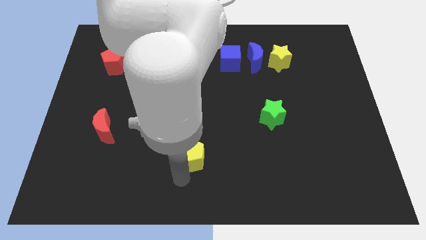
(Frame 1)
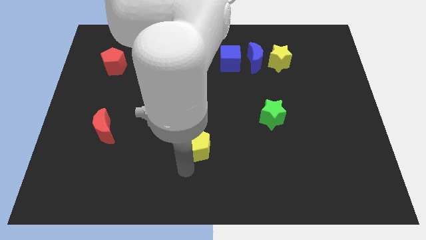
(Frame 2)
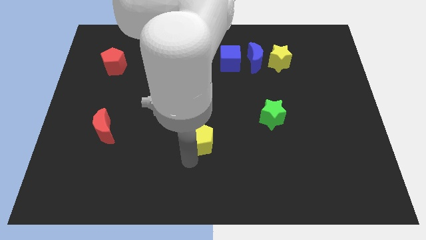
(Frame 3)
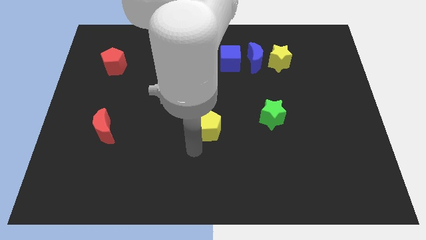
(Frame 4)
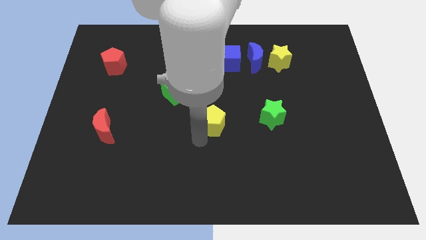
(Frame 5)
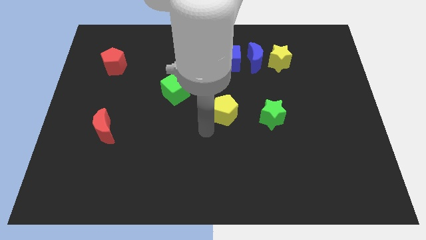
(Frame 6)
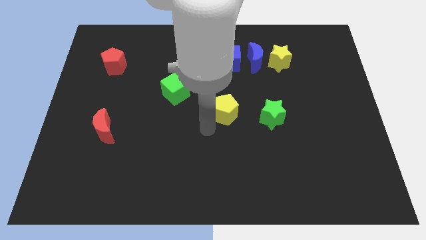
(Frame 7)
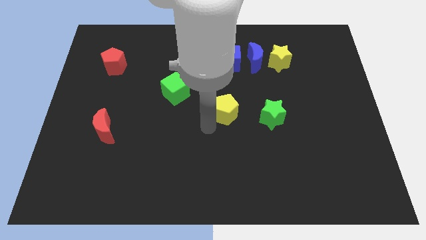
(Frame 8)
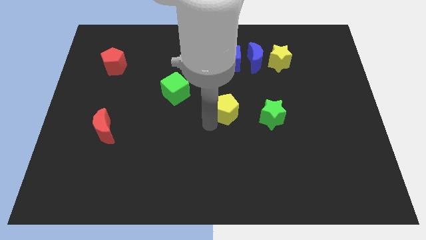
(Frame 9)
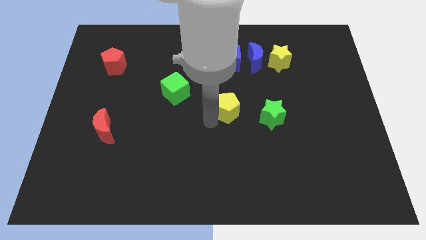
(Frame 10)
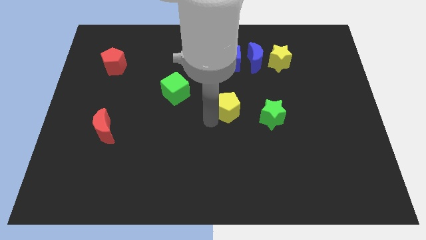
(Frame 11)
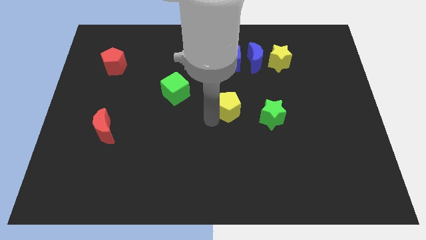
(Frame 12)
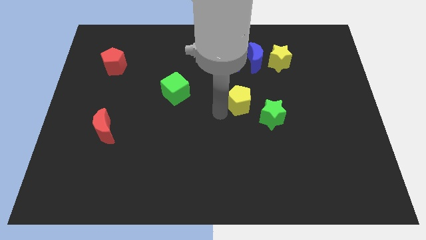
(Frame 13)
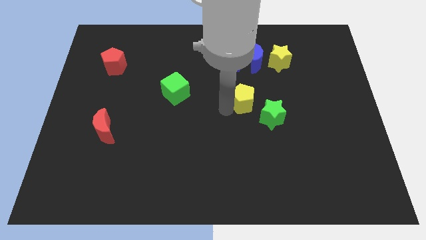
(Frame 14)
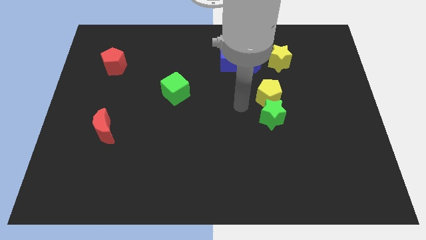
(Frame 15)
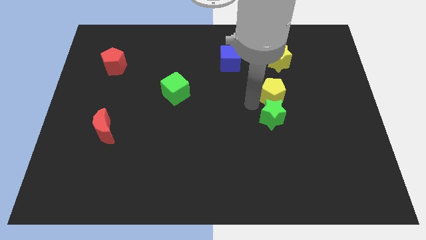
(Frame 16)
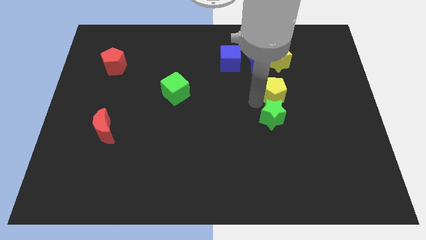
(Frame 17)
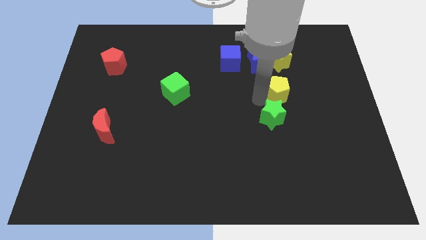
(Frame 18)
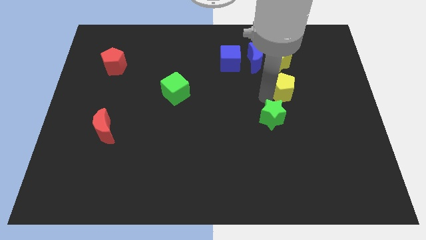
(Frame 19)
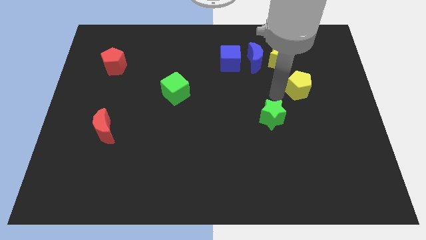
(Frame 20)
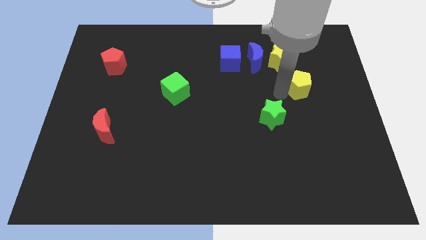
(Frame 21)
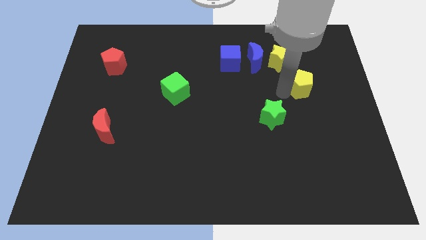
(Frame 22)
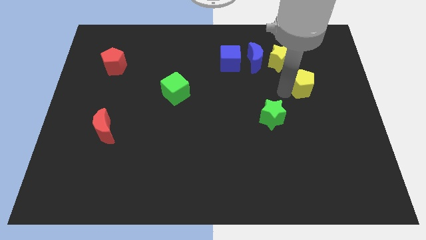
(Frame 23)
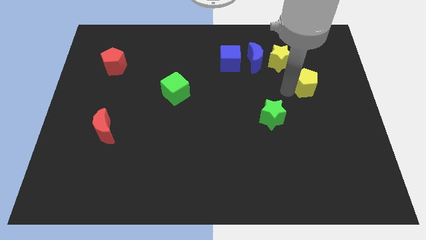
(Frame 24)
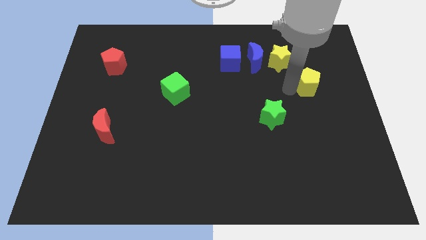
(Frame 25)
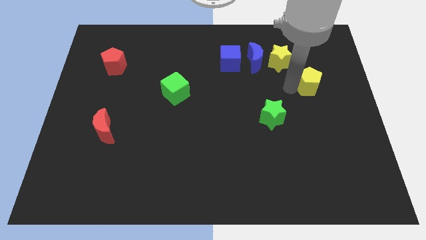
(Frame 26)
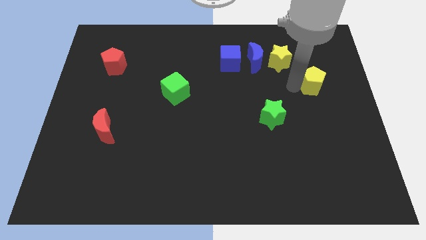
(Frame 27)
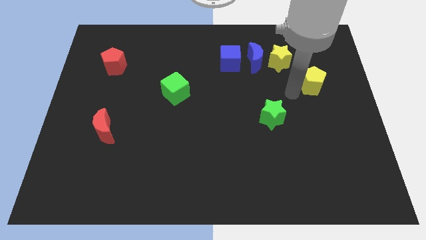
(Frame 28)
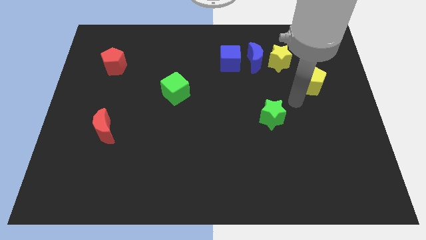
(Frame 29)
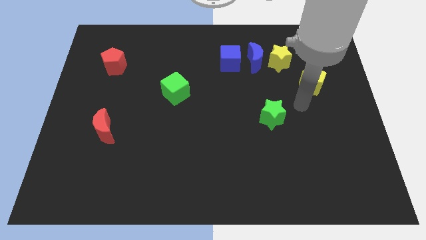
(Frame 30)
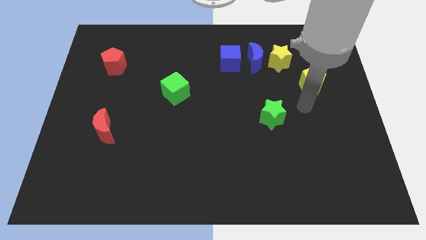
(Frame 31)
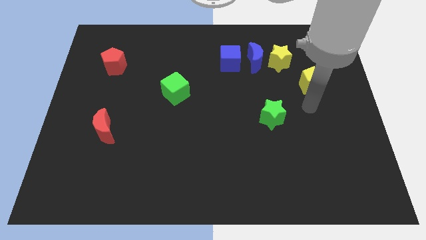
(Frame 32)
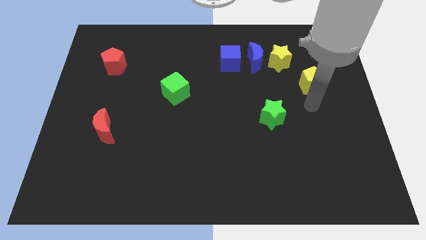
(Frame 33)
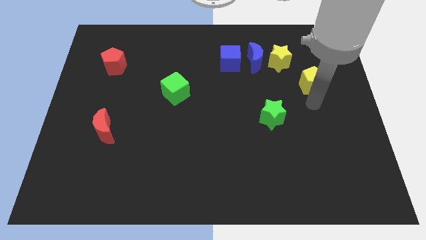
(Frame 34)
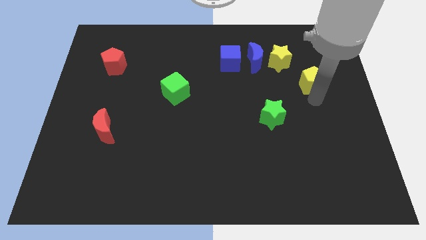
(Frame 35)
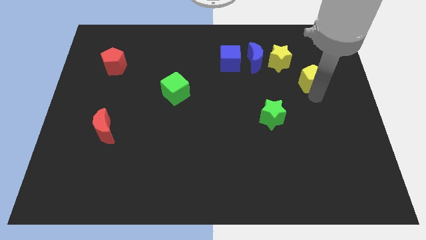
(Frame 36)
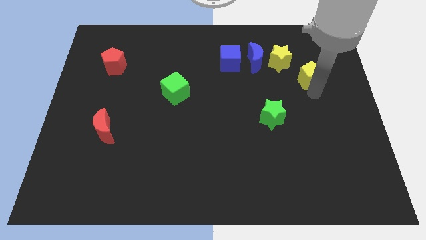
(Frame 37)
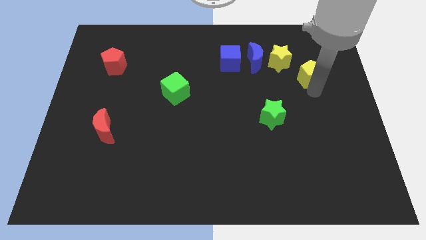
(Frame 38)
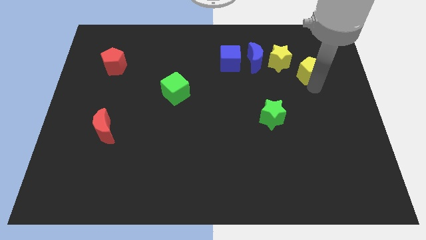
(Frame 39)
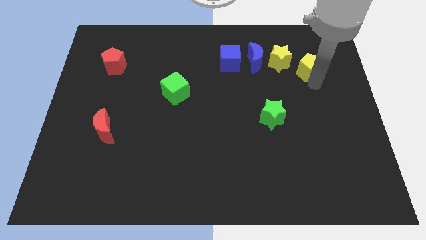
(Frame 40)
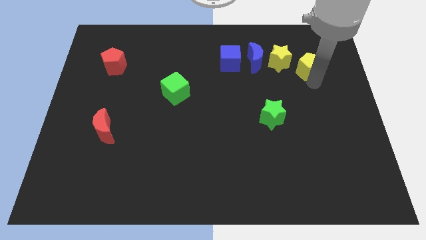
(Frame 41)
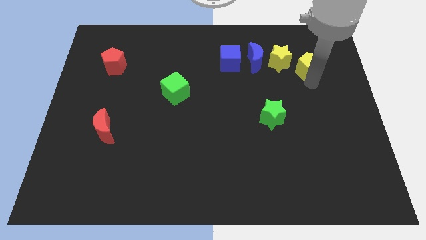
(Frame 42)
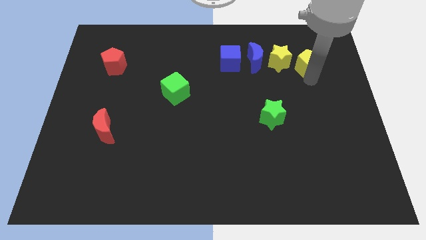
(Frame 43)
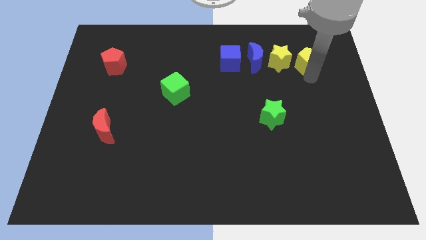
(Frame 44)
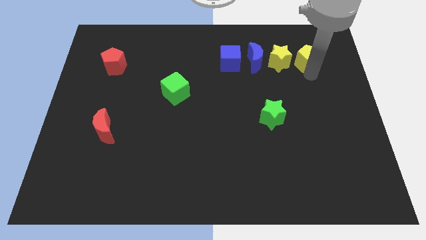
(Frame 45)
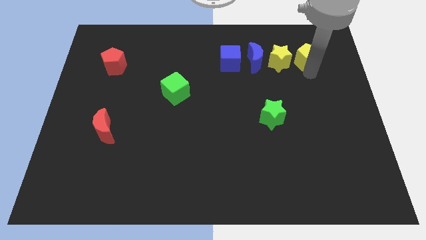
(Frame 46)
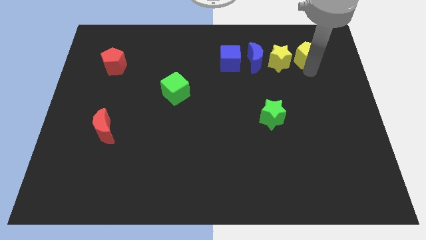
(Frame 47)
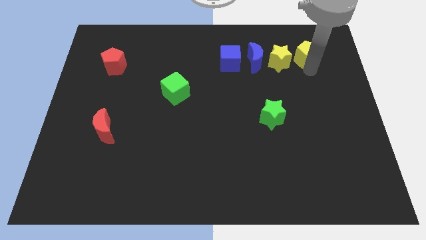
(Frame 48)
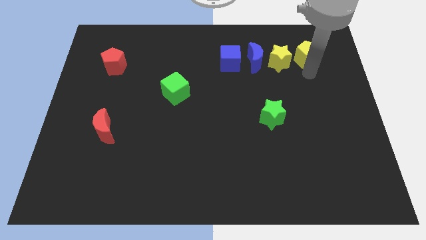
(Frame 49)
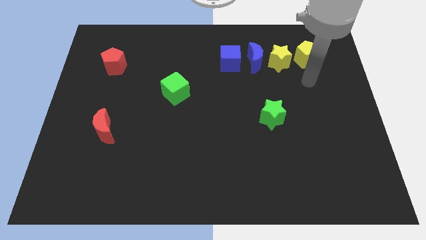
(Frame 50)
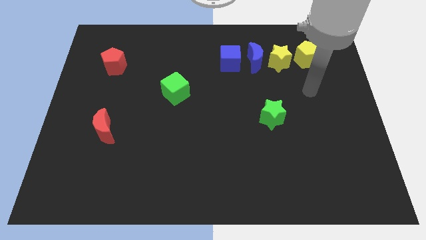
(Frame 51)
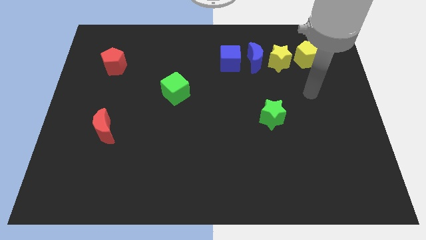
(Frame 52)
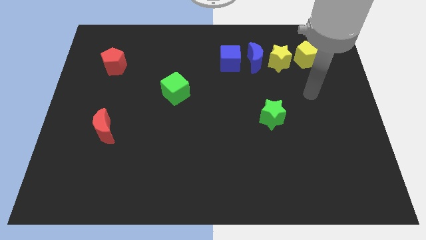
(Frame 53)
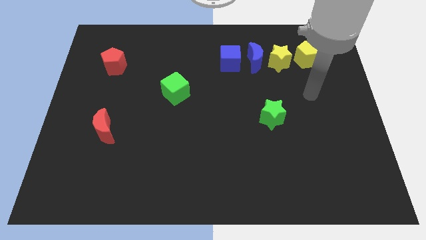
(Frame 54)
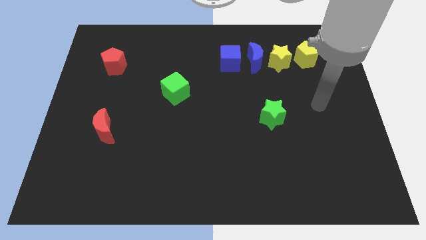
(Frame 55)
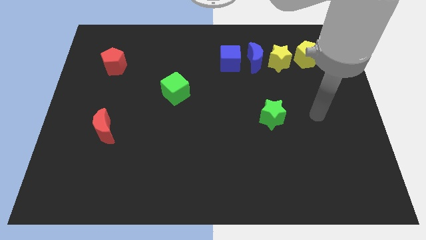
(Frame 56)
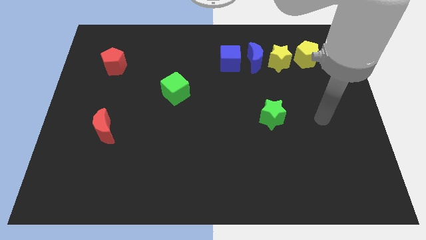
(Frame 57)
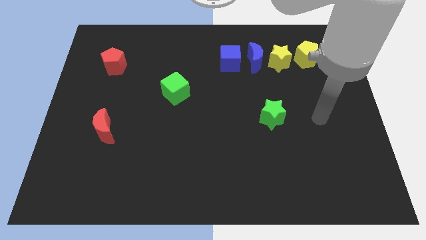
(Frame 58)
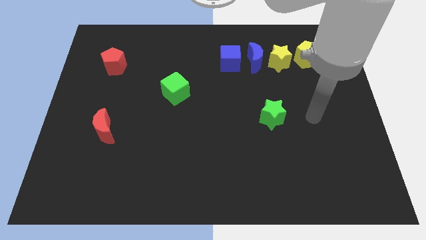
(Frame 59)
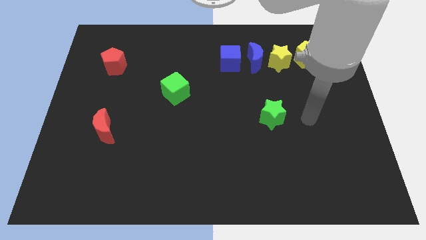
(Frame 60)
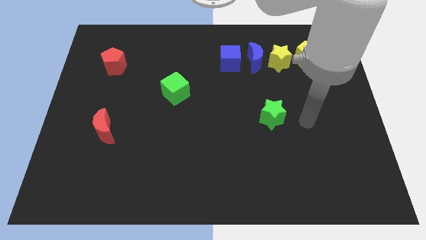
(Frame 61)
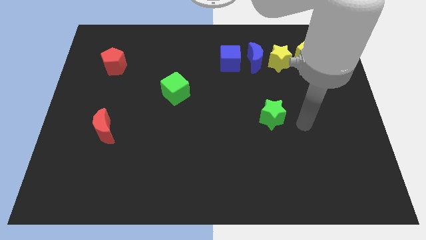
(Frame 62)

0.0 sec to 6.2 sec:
place the yellow pentagon to the right of the yellow star

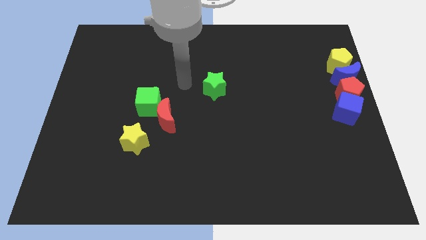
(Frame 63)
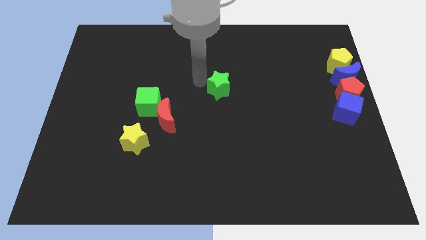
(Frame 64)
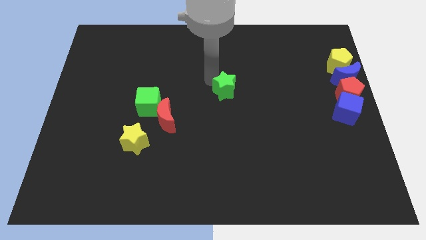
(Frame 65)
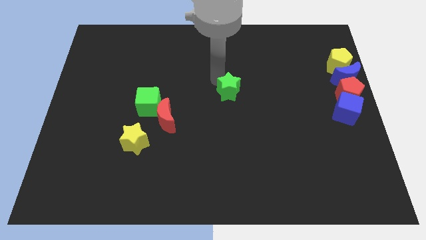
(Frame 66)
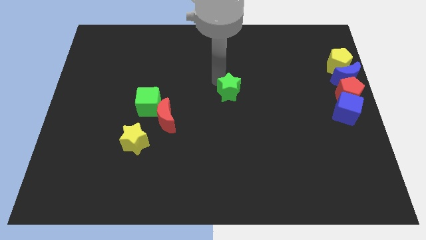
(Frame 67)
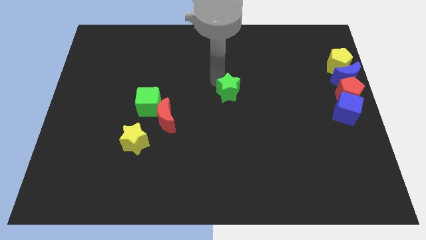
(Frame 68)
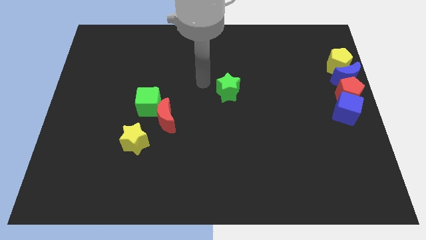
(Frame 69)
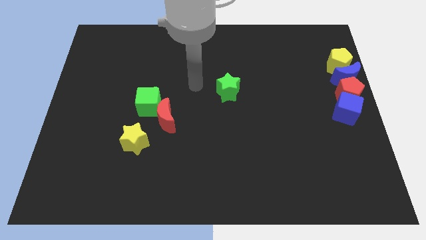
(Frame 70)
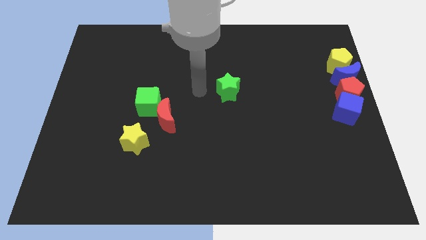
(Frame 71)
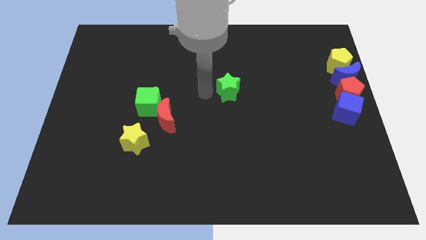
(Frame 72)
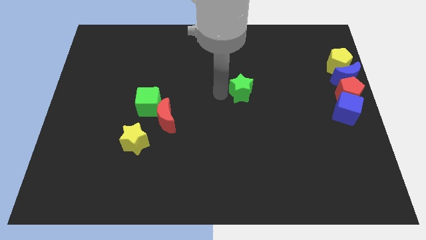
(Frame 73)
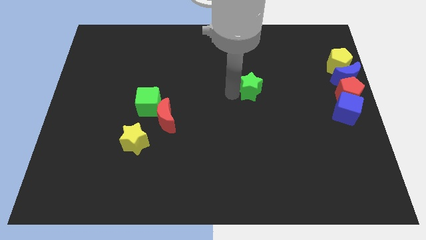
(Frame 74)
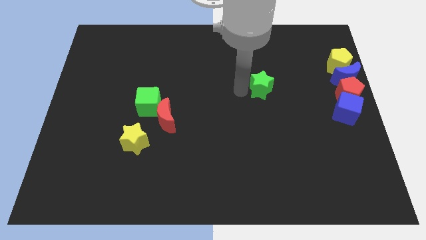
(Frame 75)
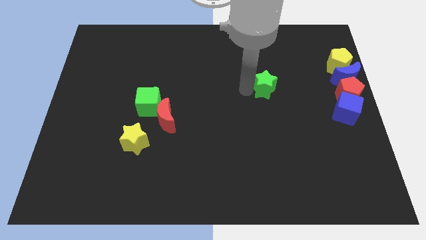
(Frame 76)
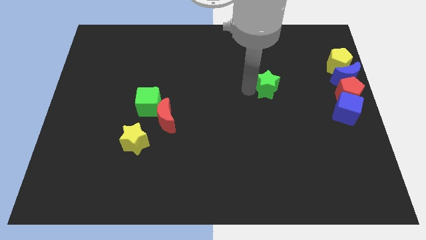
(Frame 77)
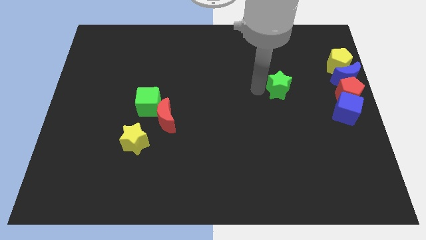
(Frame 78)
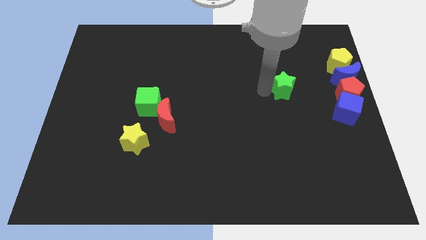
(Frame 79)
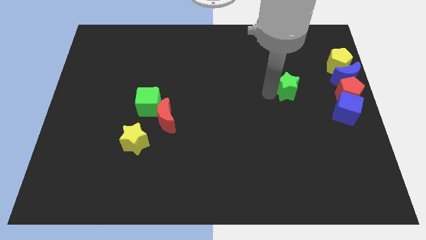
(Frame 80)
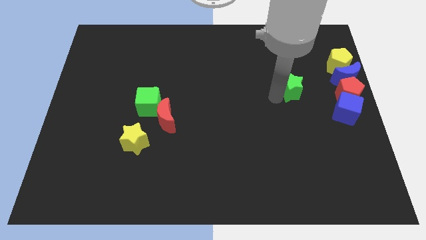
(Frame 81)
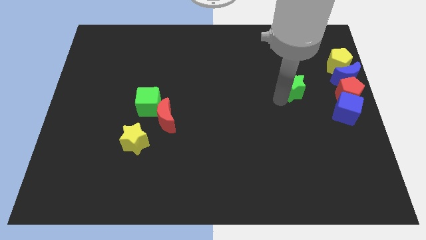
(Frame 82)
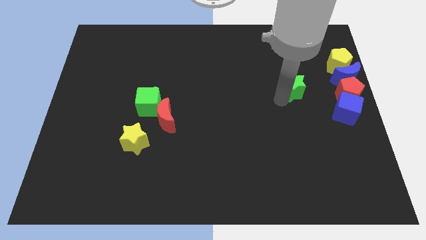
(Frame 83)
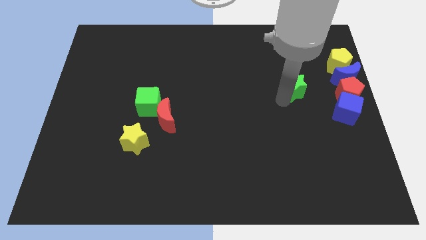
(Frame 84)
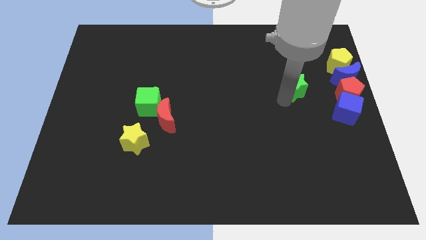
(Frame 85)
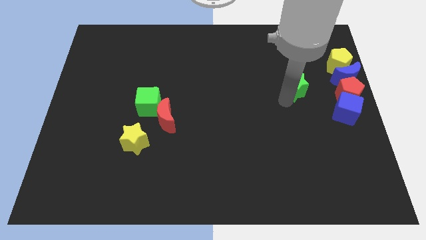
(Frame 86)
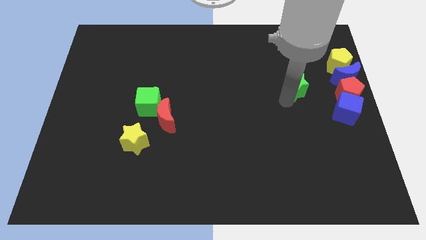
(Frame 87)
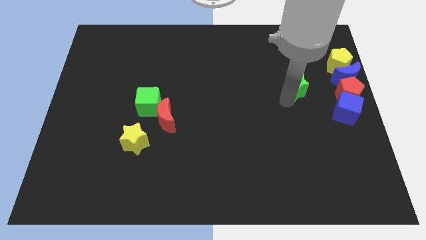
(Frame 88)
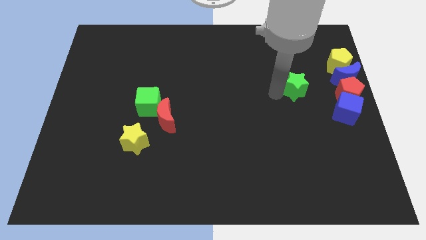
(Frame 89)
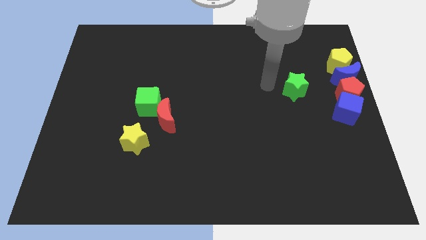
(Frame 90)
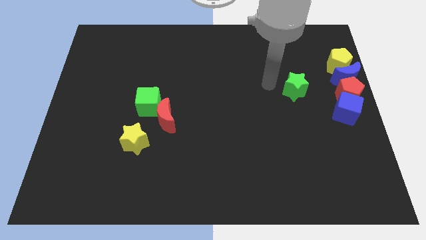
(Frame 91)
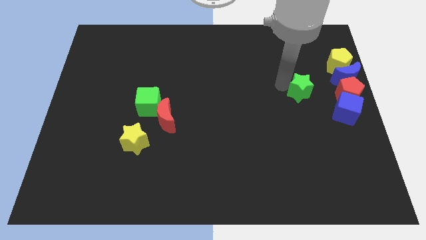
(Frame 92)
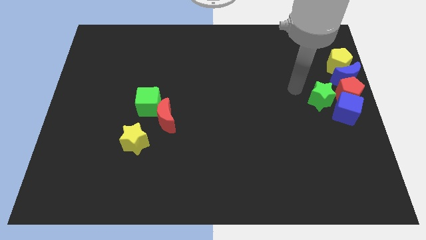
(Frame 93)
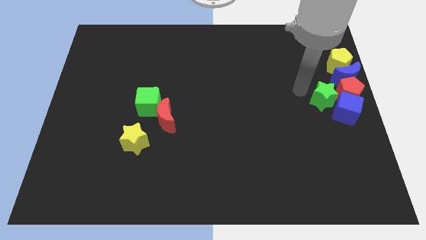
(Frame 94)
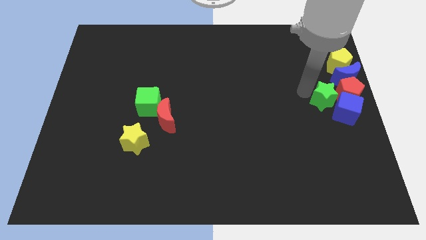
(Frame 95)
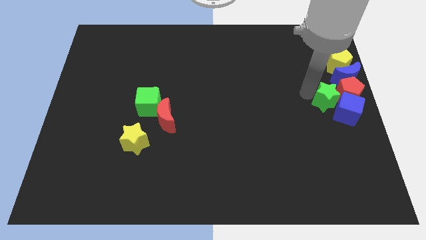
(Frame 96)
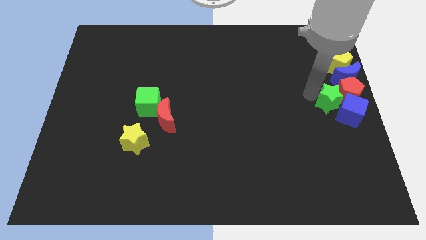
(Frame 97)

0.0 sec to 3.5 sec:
move the green star into blue cube to the left
